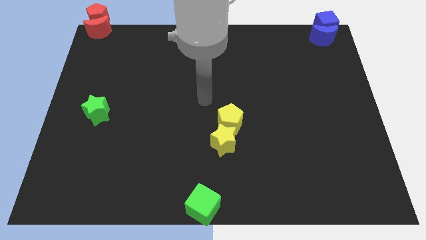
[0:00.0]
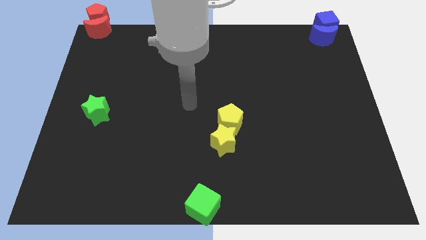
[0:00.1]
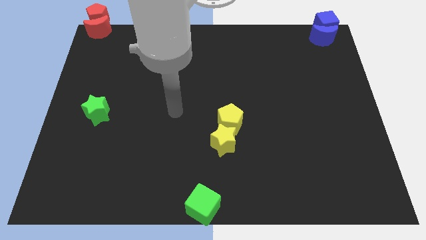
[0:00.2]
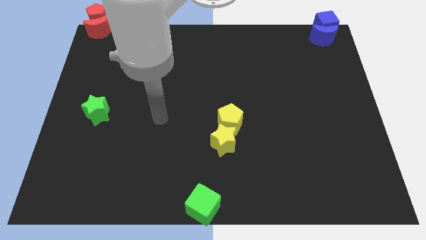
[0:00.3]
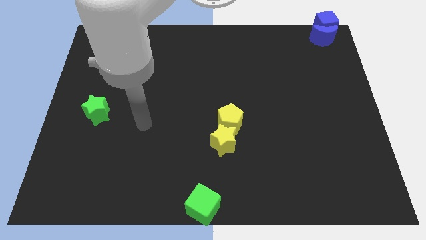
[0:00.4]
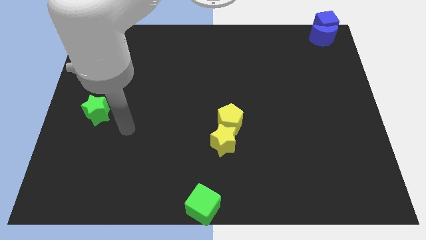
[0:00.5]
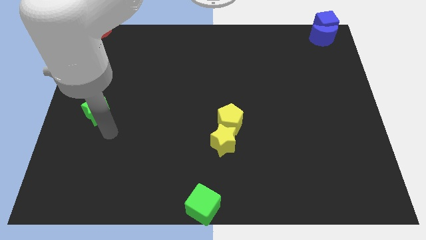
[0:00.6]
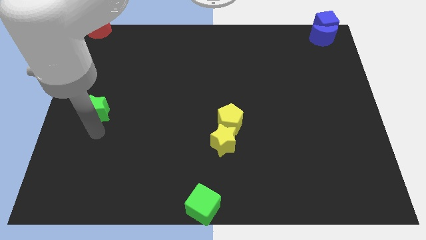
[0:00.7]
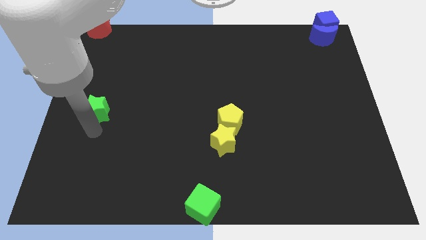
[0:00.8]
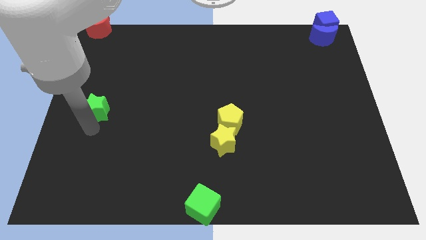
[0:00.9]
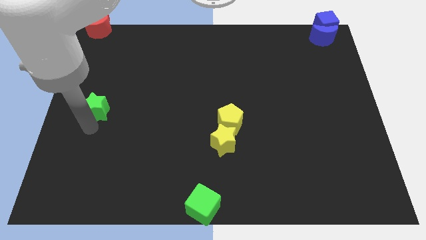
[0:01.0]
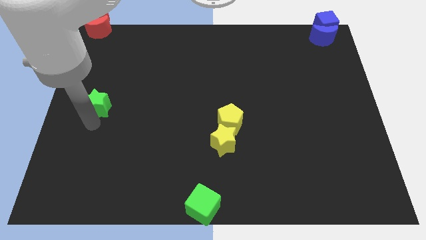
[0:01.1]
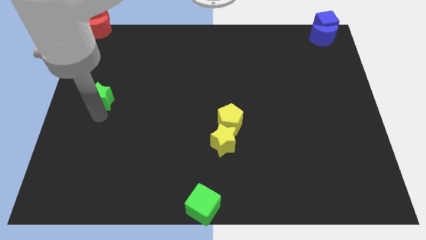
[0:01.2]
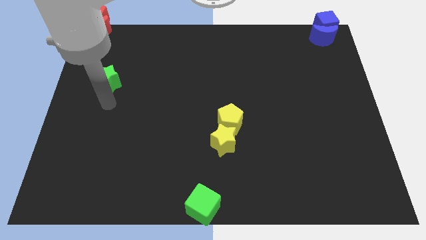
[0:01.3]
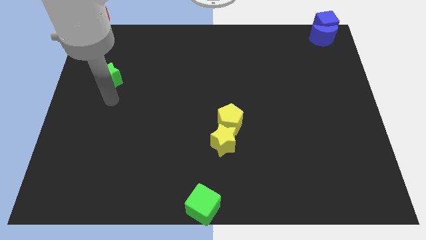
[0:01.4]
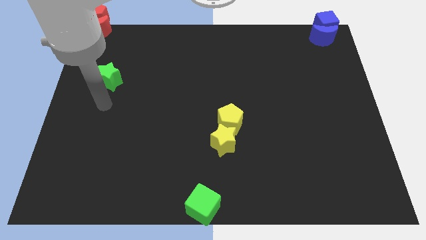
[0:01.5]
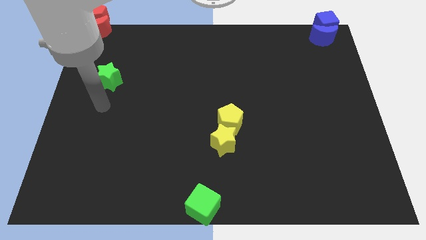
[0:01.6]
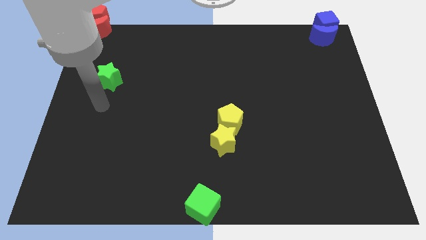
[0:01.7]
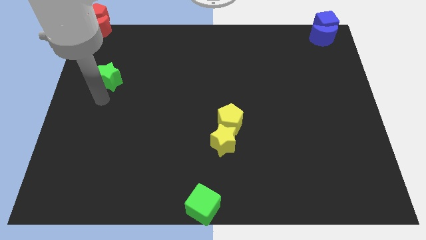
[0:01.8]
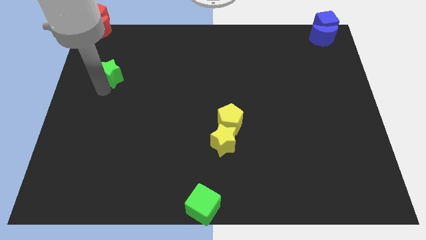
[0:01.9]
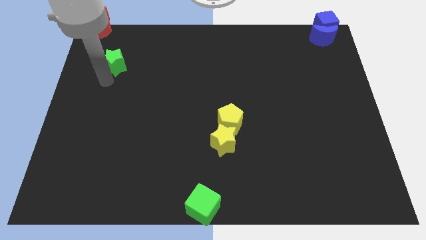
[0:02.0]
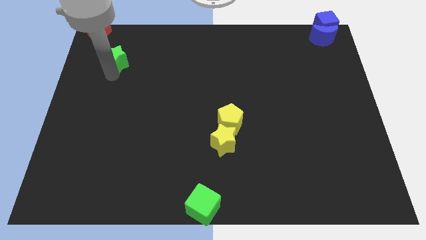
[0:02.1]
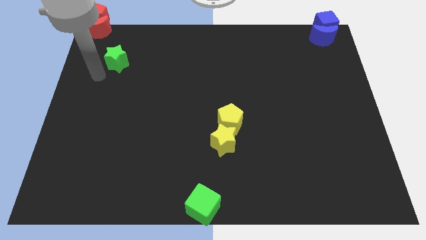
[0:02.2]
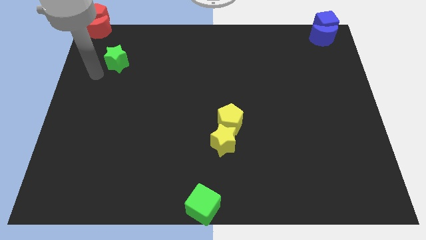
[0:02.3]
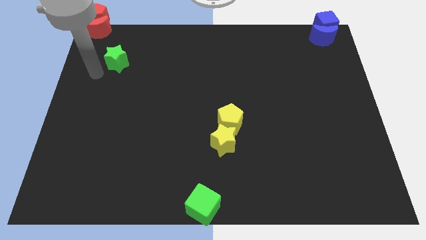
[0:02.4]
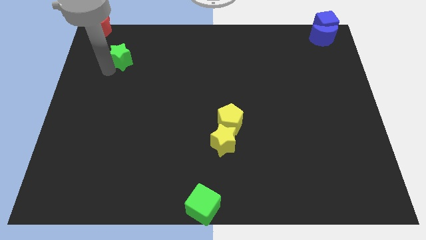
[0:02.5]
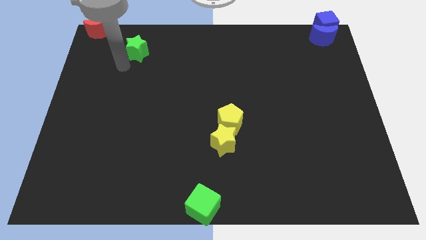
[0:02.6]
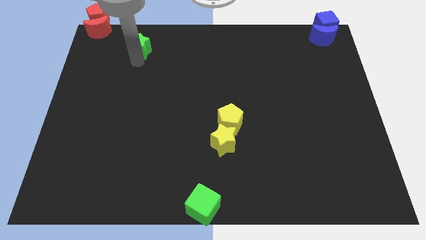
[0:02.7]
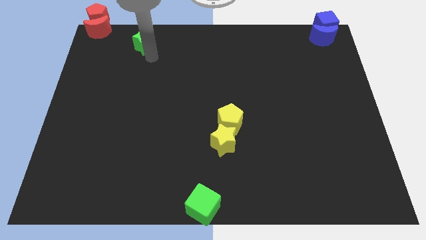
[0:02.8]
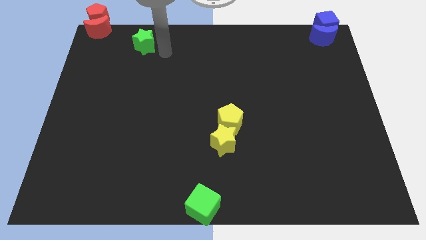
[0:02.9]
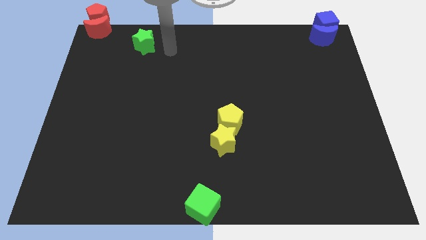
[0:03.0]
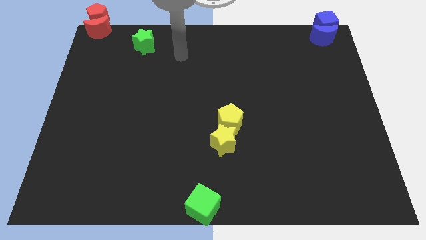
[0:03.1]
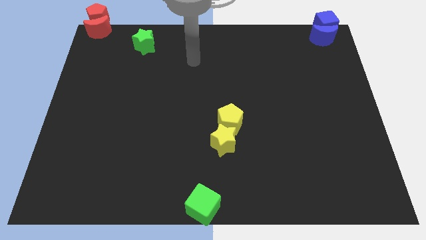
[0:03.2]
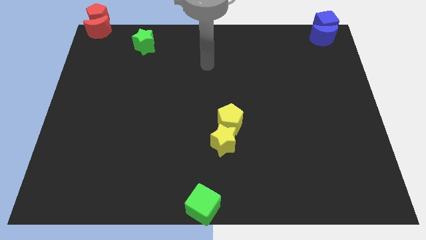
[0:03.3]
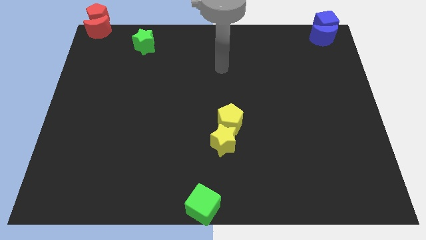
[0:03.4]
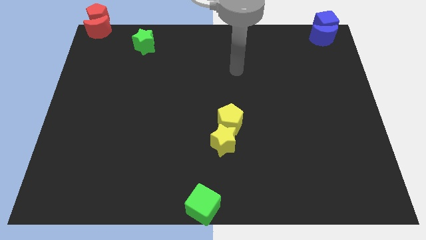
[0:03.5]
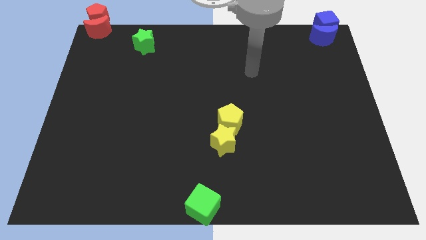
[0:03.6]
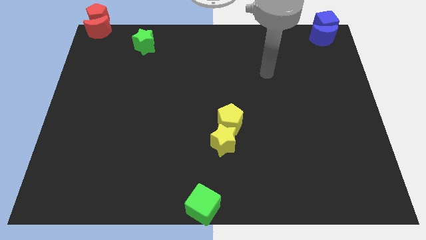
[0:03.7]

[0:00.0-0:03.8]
place the green star diagonal below red moon

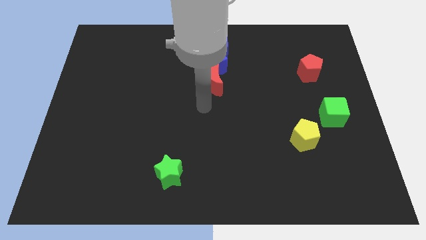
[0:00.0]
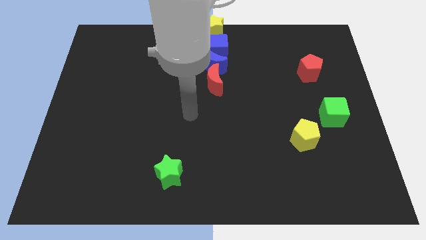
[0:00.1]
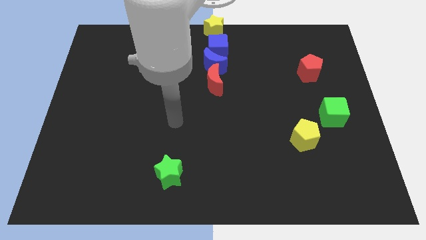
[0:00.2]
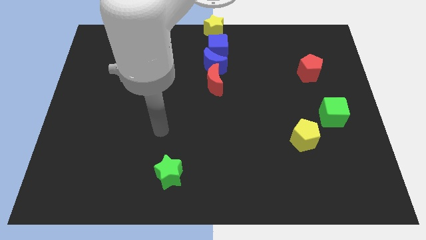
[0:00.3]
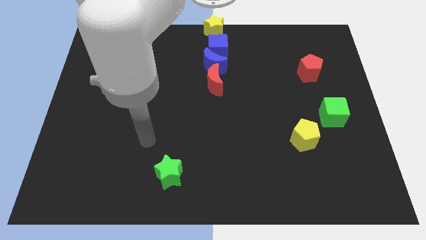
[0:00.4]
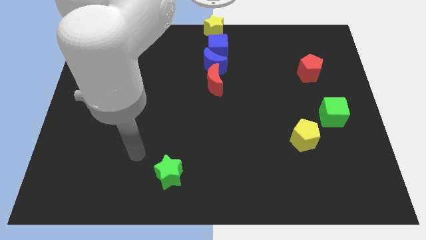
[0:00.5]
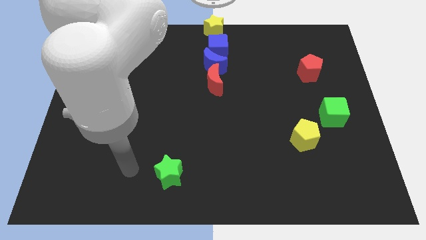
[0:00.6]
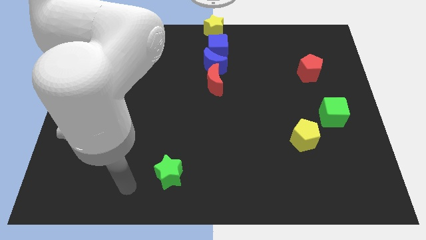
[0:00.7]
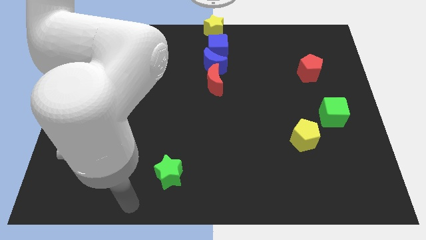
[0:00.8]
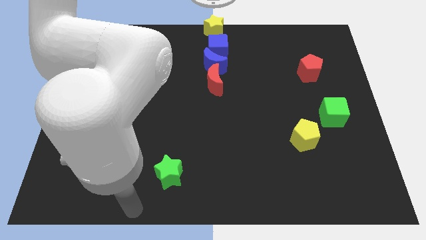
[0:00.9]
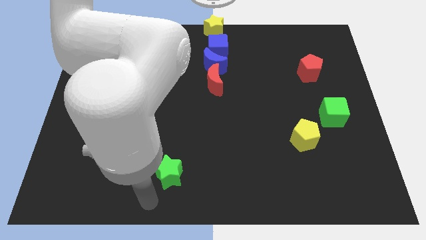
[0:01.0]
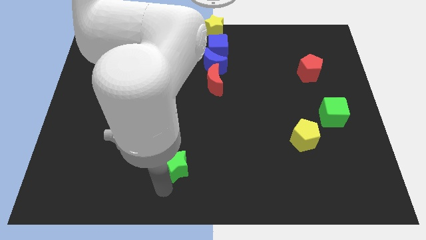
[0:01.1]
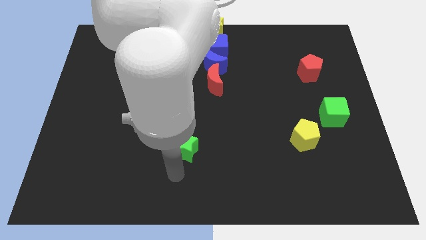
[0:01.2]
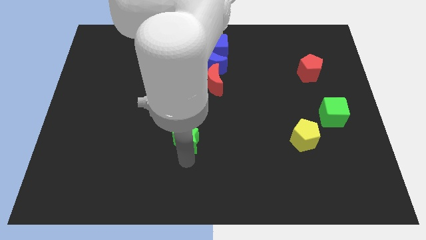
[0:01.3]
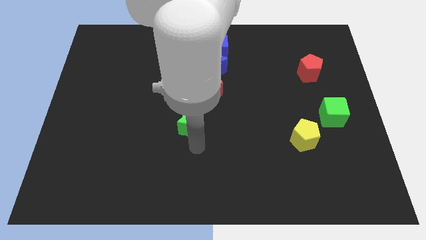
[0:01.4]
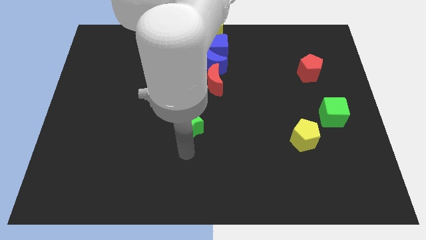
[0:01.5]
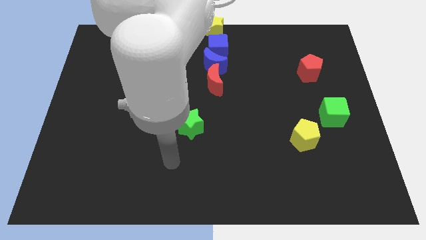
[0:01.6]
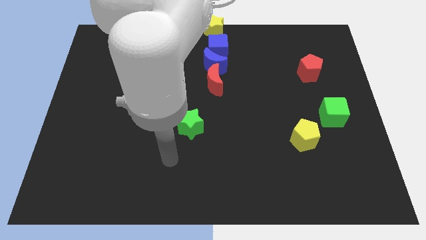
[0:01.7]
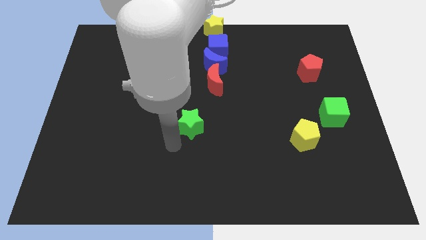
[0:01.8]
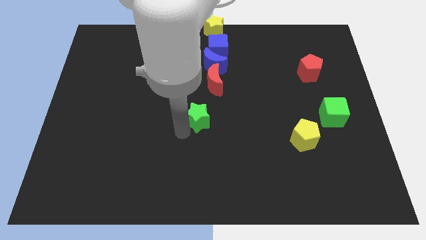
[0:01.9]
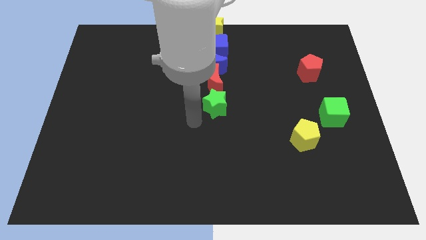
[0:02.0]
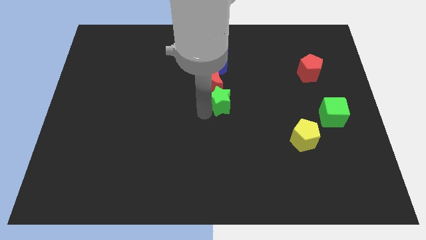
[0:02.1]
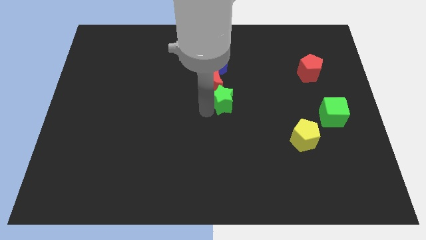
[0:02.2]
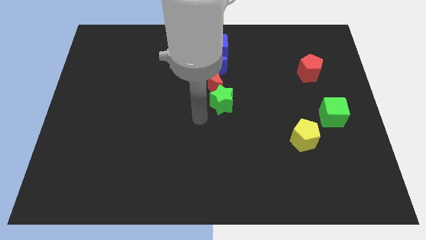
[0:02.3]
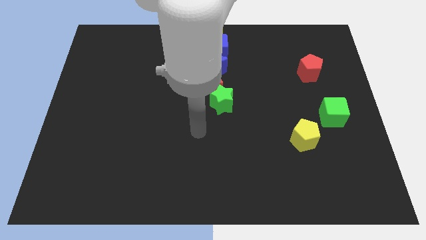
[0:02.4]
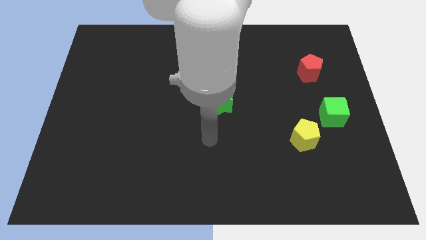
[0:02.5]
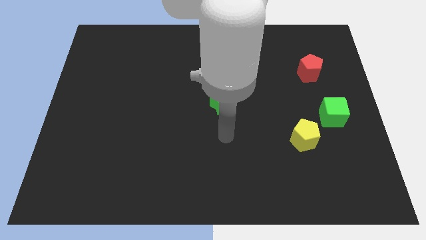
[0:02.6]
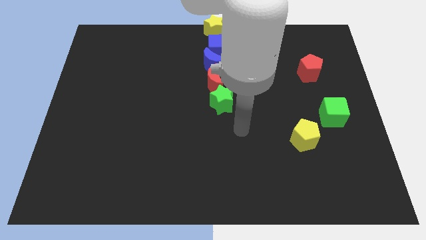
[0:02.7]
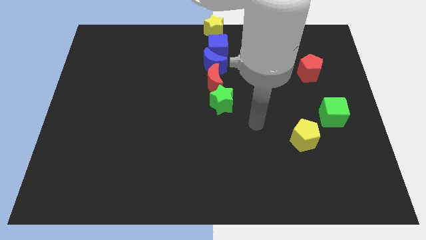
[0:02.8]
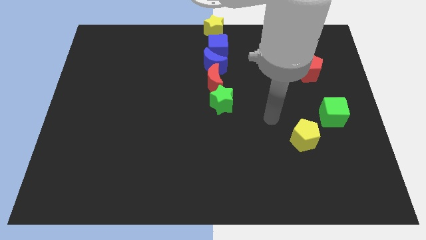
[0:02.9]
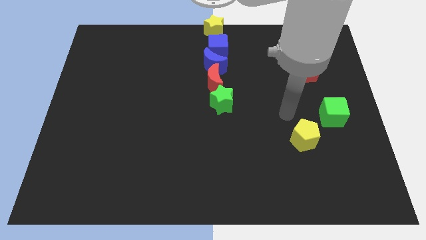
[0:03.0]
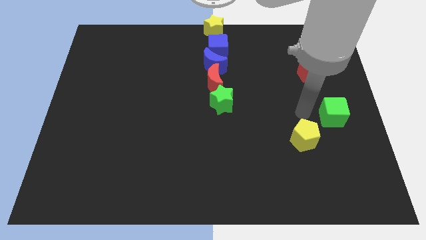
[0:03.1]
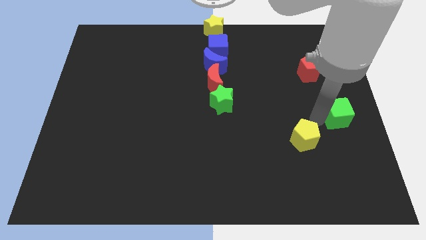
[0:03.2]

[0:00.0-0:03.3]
push the green star at the bottom of the red moon

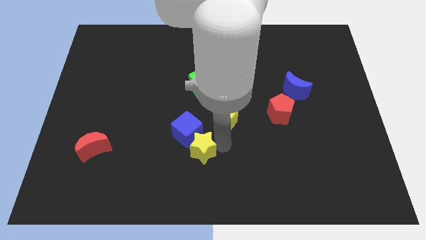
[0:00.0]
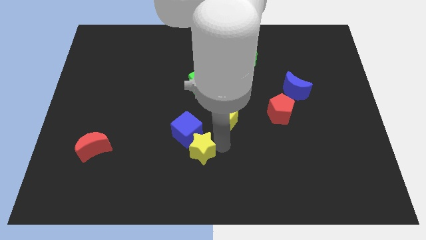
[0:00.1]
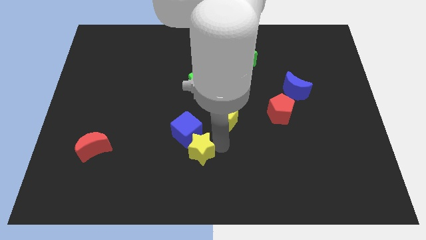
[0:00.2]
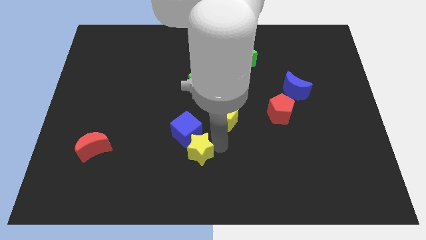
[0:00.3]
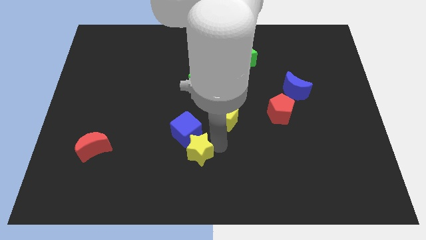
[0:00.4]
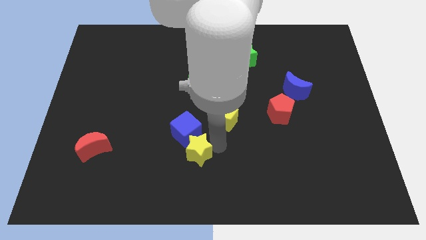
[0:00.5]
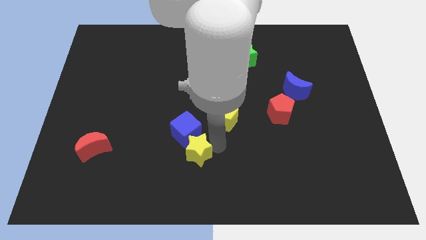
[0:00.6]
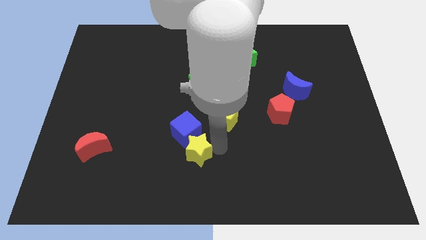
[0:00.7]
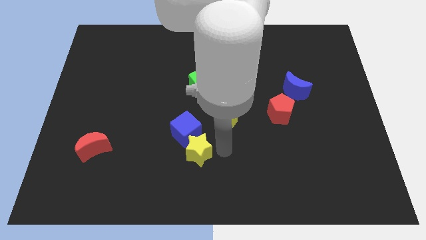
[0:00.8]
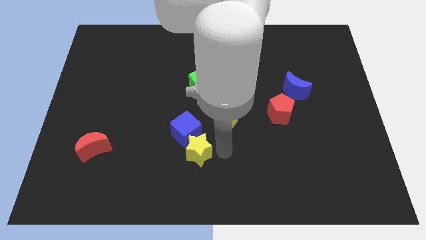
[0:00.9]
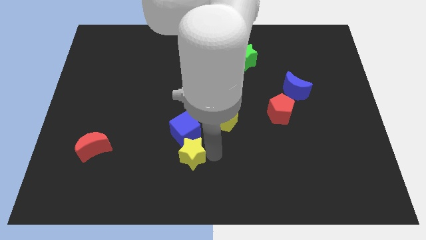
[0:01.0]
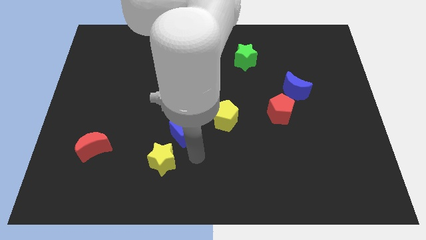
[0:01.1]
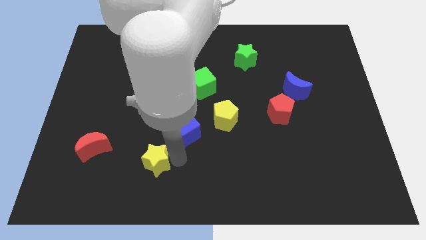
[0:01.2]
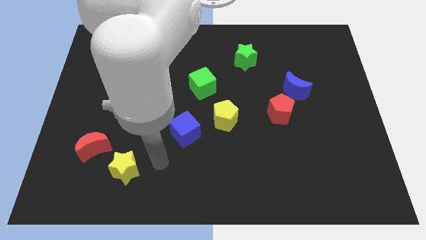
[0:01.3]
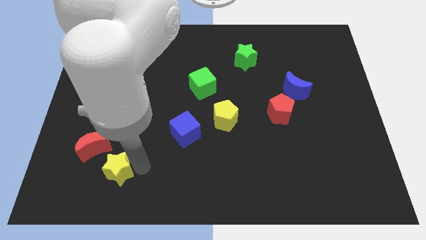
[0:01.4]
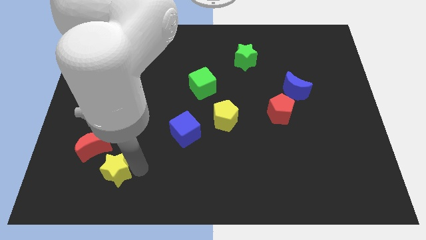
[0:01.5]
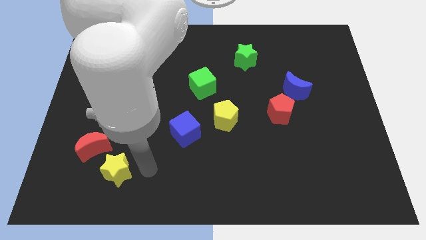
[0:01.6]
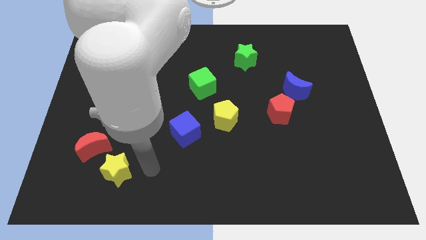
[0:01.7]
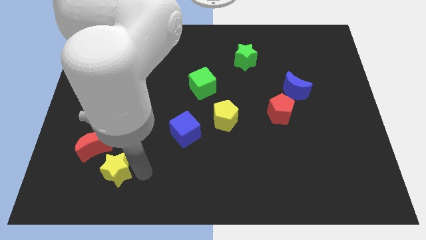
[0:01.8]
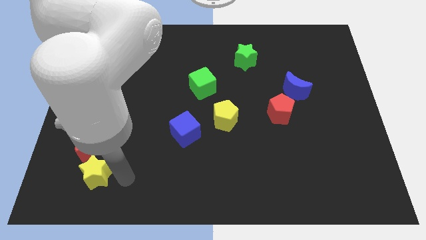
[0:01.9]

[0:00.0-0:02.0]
put the yellow star below the red moon

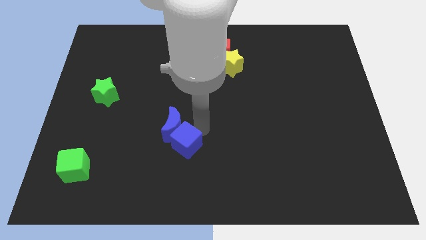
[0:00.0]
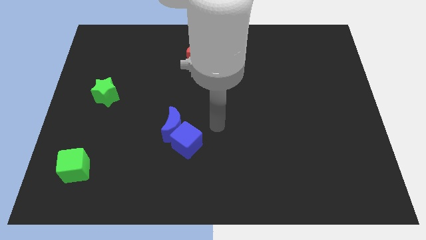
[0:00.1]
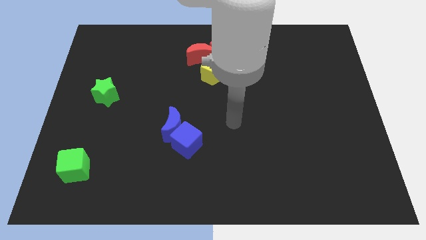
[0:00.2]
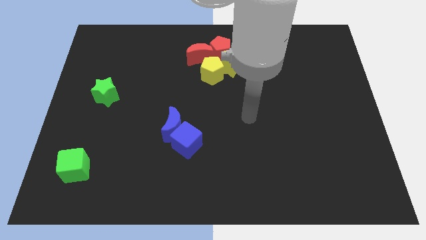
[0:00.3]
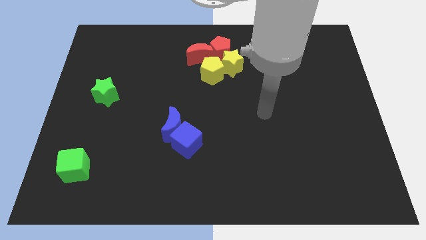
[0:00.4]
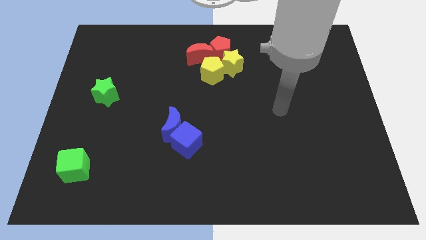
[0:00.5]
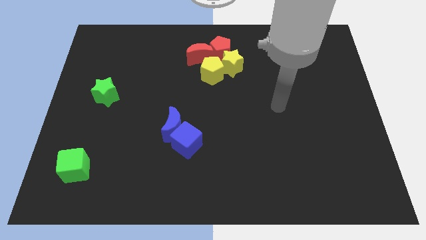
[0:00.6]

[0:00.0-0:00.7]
put your arm vertically at the bottom of the yellow pentagon
